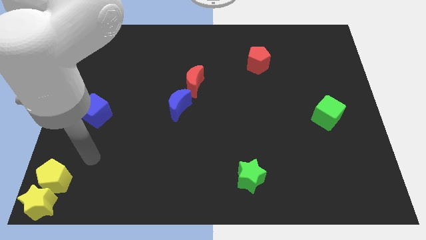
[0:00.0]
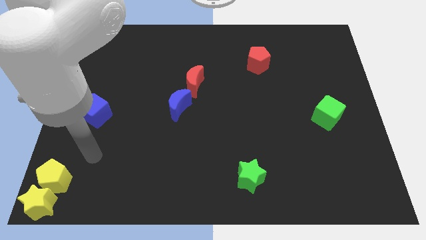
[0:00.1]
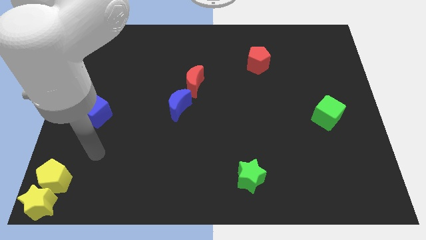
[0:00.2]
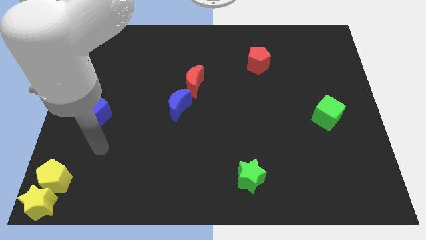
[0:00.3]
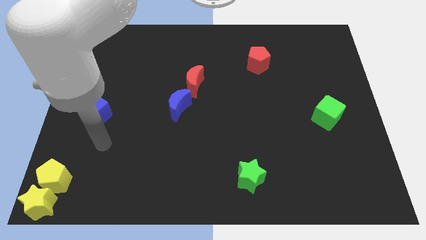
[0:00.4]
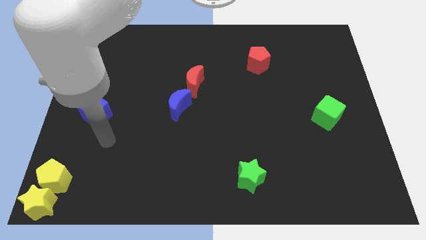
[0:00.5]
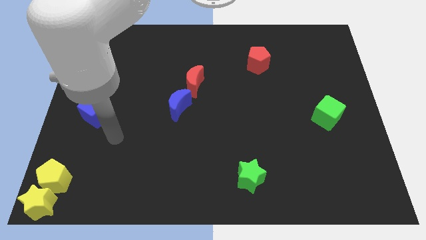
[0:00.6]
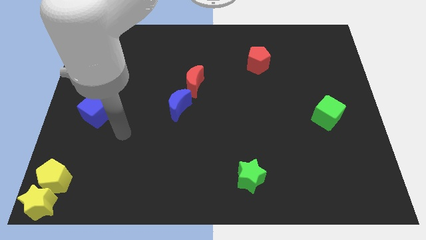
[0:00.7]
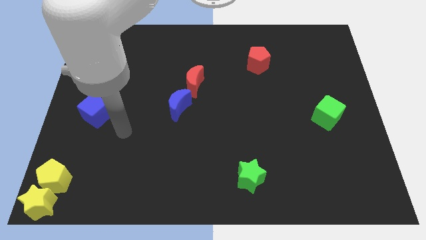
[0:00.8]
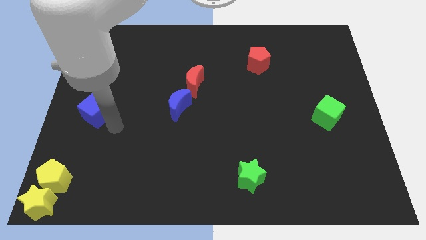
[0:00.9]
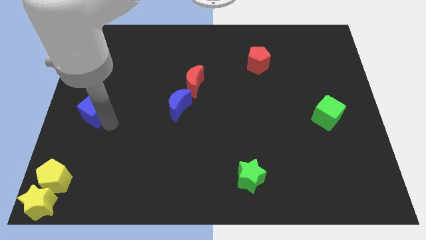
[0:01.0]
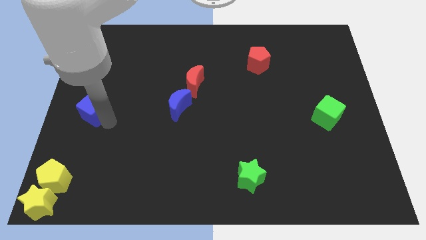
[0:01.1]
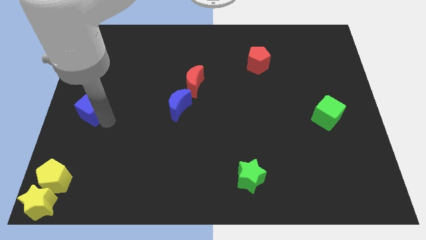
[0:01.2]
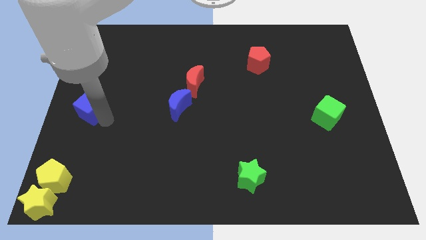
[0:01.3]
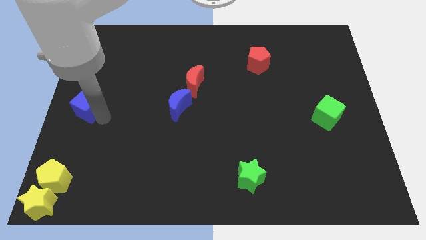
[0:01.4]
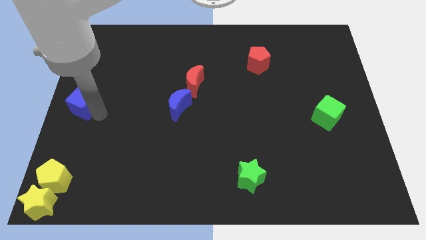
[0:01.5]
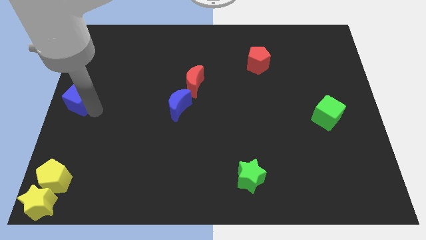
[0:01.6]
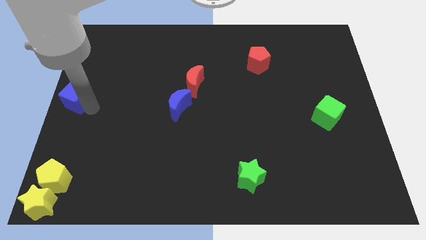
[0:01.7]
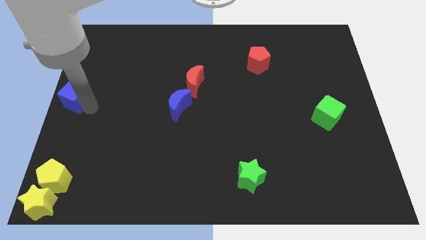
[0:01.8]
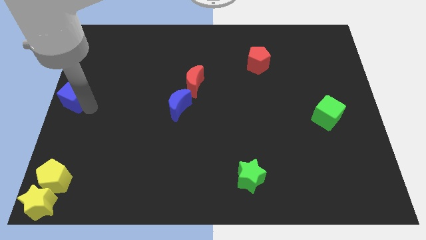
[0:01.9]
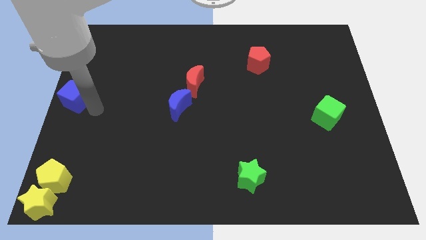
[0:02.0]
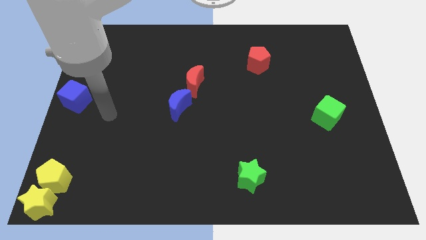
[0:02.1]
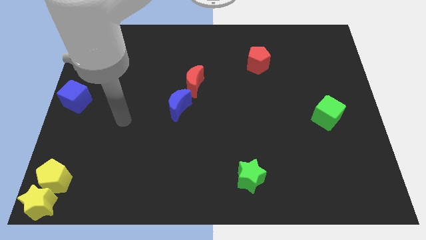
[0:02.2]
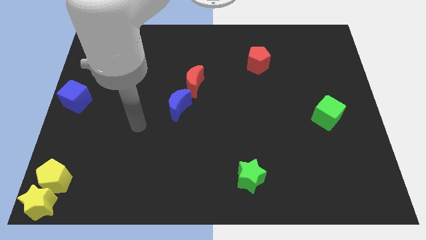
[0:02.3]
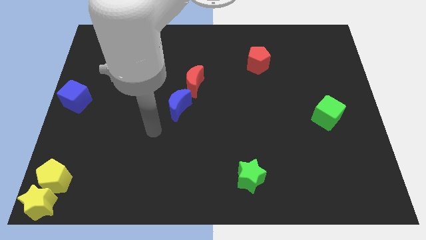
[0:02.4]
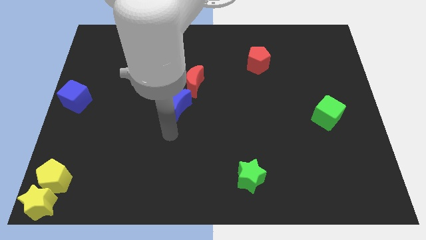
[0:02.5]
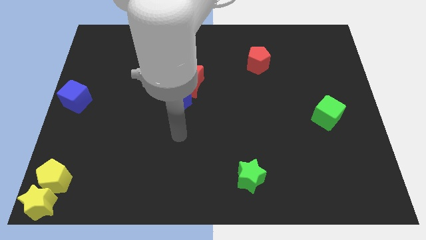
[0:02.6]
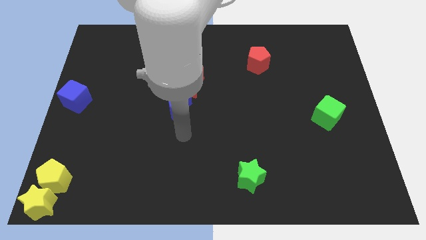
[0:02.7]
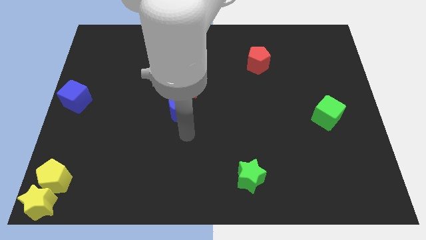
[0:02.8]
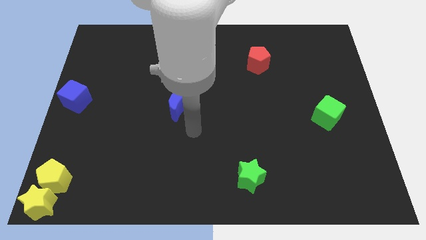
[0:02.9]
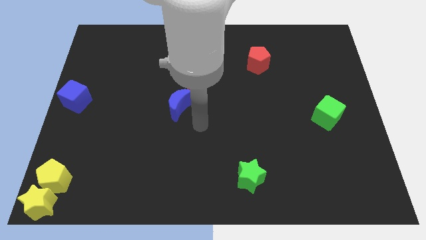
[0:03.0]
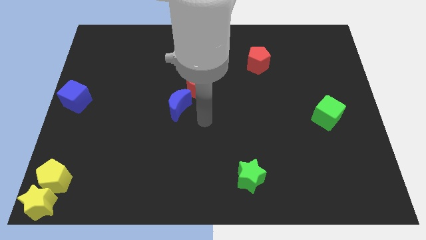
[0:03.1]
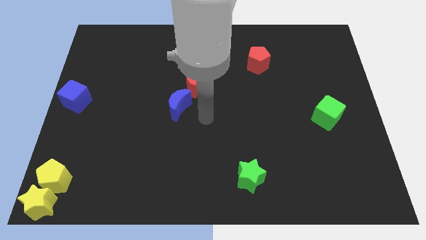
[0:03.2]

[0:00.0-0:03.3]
move the blue cube to the centre left of the board

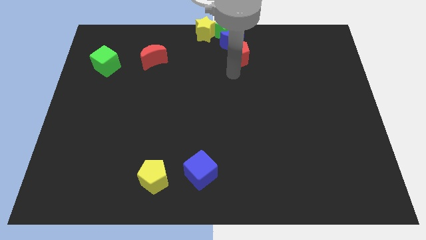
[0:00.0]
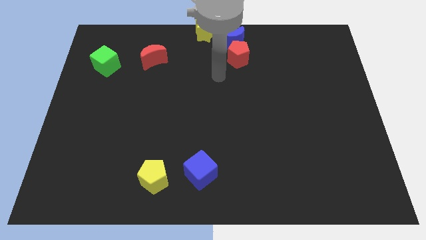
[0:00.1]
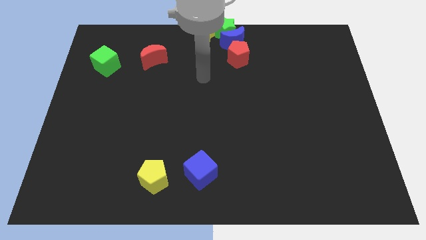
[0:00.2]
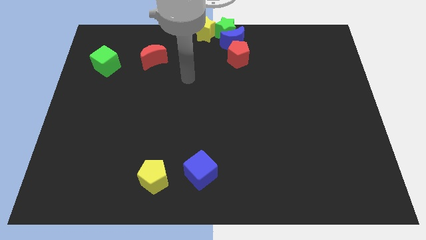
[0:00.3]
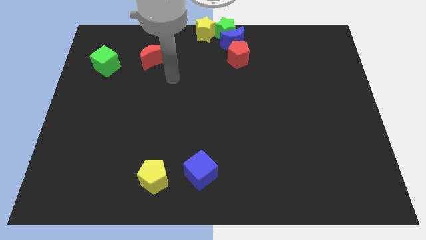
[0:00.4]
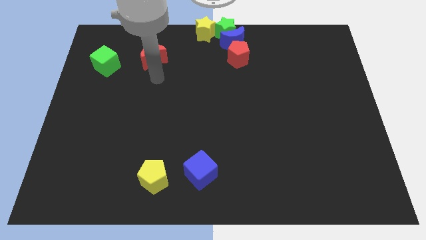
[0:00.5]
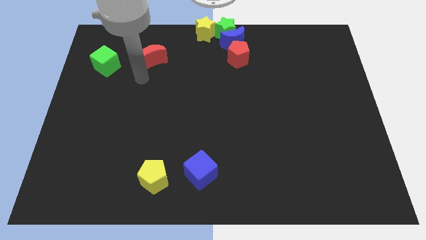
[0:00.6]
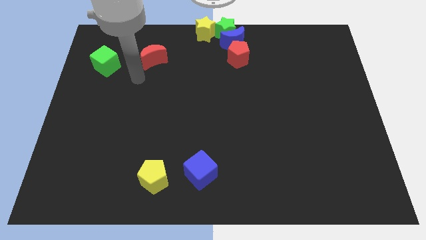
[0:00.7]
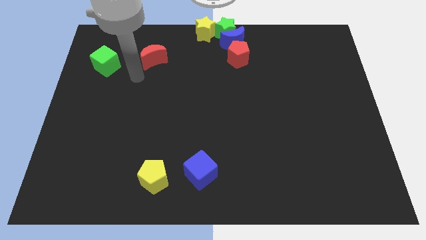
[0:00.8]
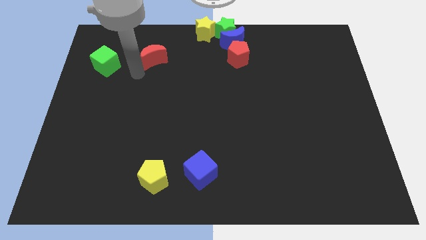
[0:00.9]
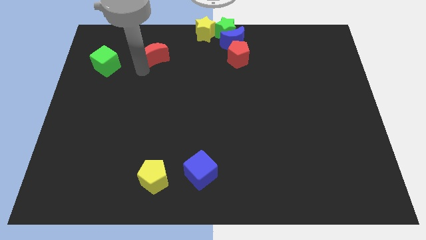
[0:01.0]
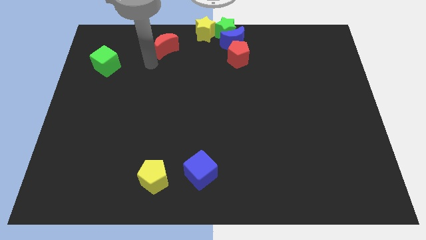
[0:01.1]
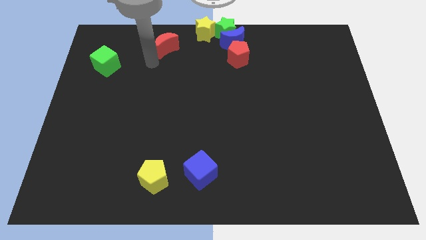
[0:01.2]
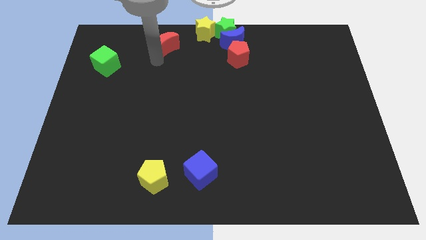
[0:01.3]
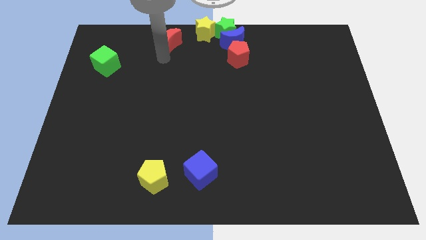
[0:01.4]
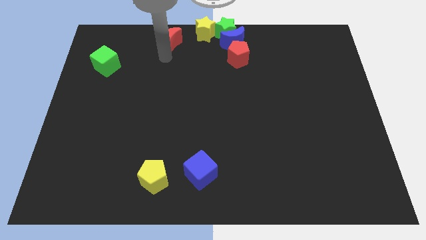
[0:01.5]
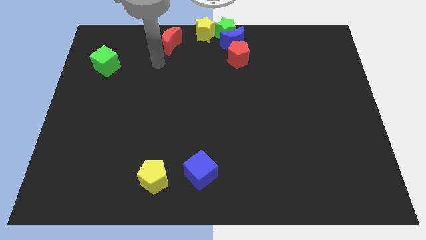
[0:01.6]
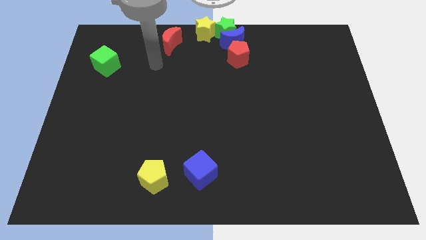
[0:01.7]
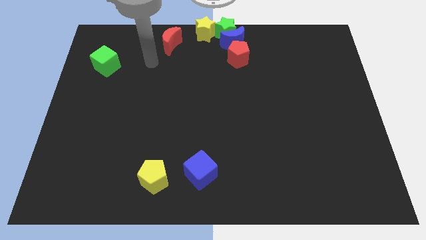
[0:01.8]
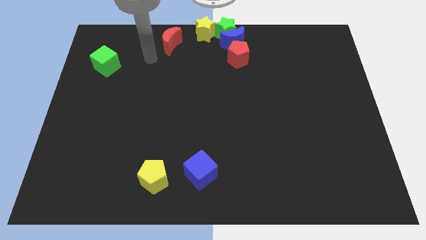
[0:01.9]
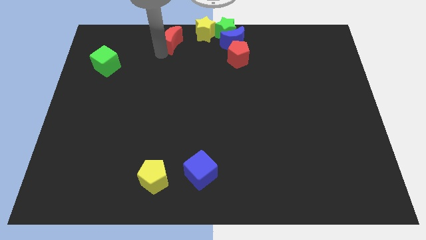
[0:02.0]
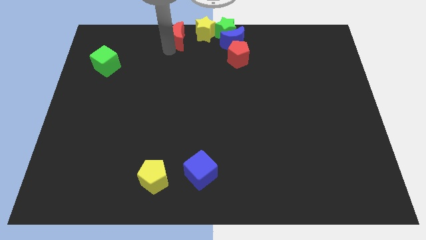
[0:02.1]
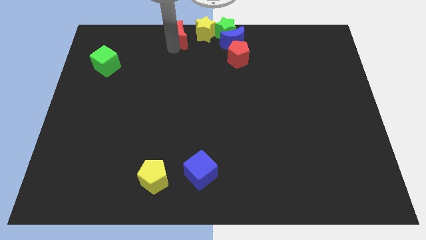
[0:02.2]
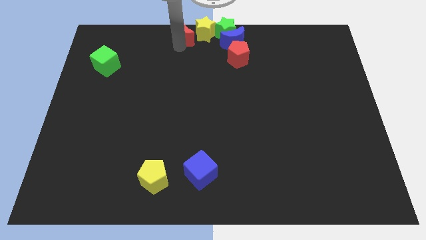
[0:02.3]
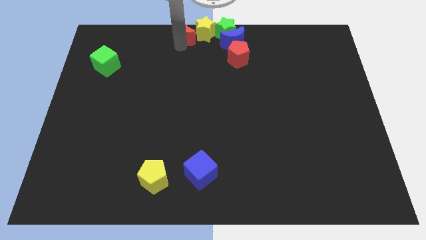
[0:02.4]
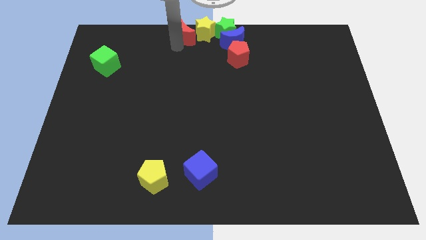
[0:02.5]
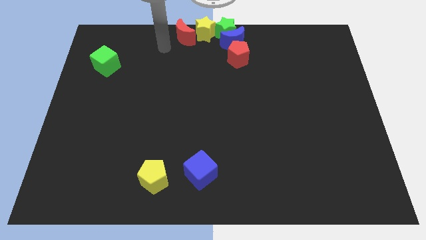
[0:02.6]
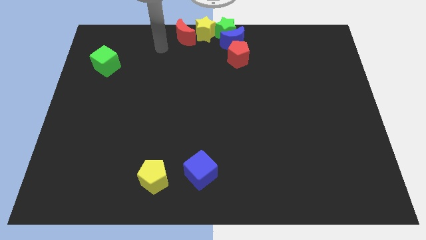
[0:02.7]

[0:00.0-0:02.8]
place red moon to the left of yellow star

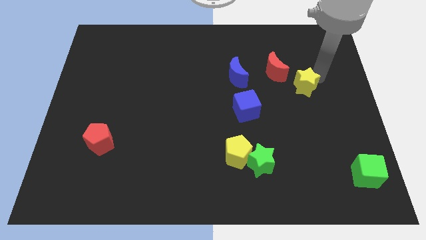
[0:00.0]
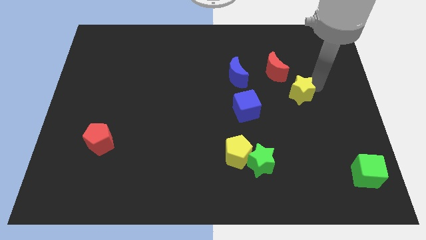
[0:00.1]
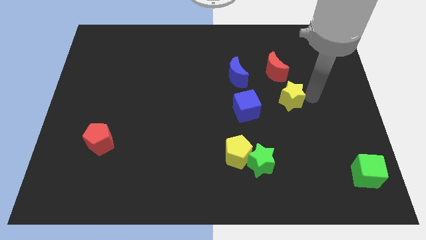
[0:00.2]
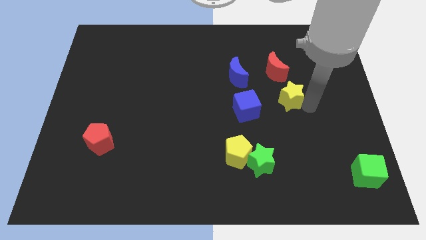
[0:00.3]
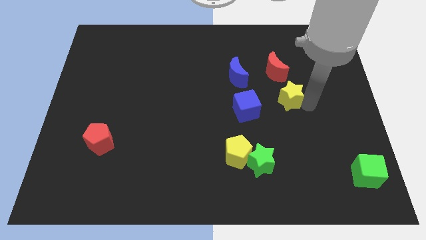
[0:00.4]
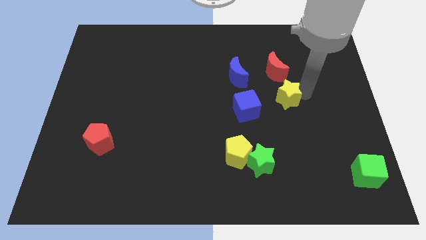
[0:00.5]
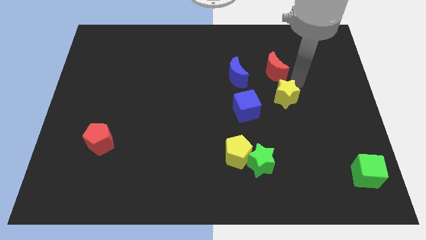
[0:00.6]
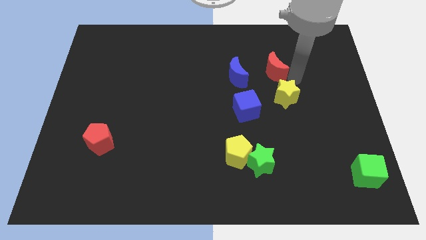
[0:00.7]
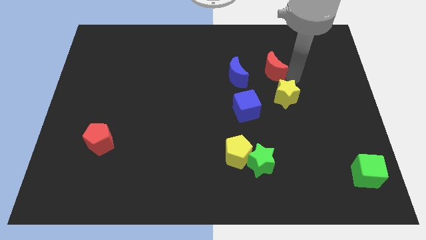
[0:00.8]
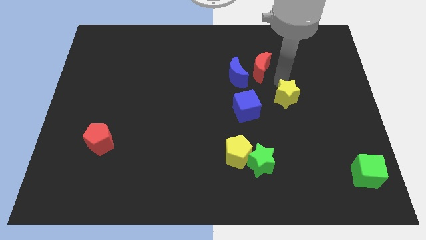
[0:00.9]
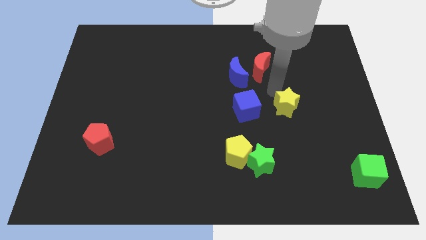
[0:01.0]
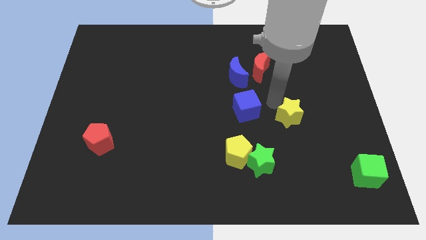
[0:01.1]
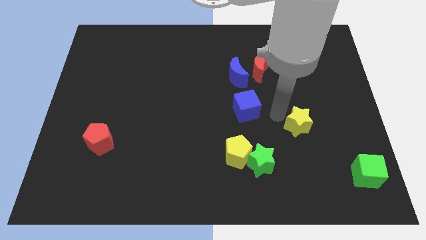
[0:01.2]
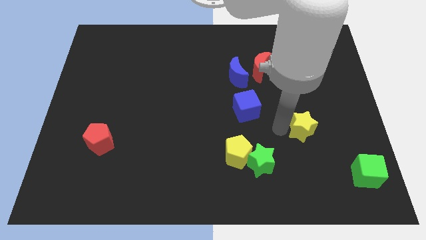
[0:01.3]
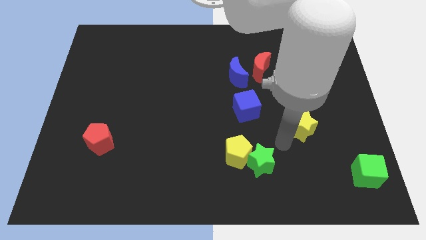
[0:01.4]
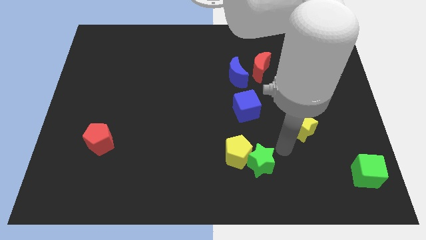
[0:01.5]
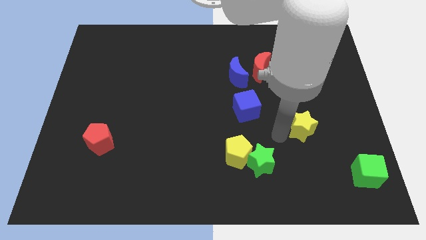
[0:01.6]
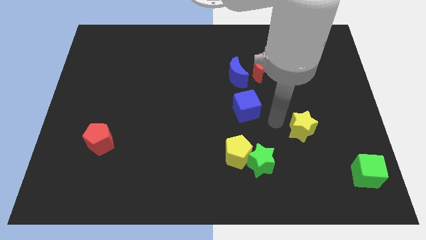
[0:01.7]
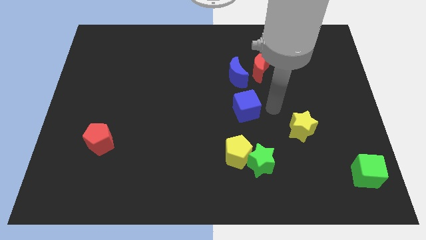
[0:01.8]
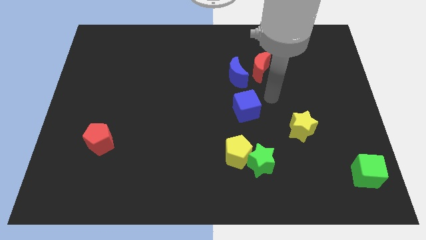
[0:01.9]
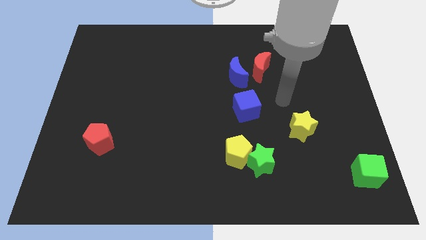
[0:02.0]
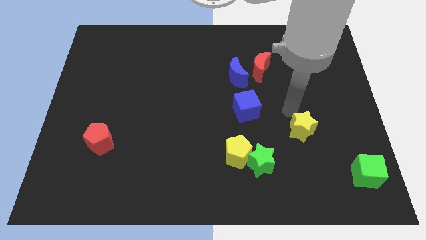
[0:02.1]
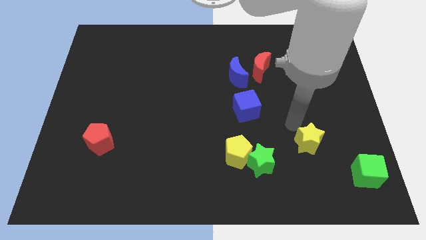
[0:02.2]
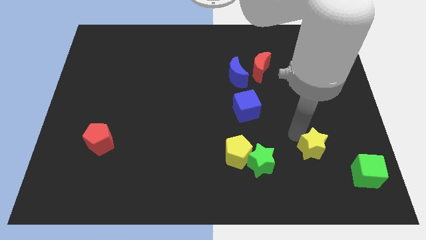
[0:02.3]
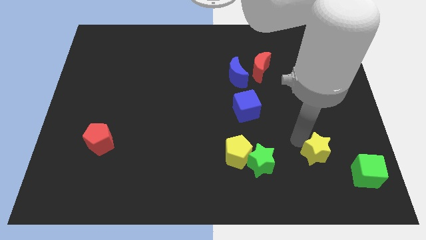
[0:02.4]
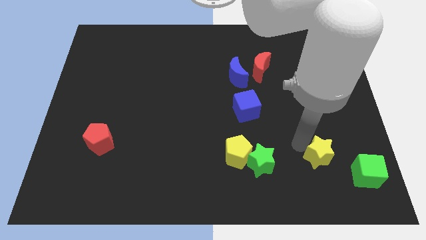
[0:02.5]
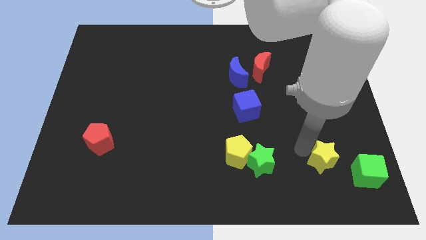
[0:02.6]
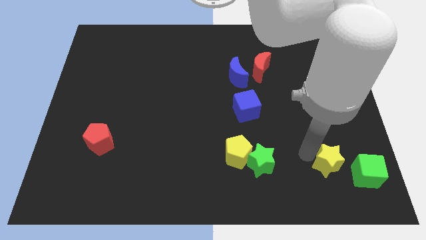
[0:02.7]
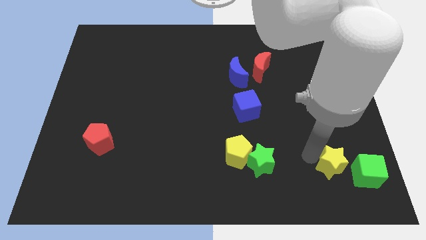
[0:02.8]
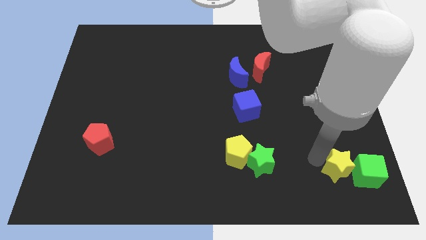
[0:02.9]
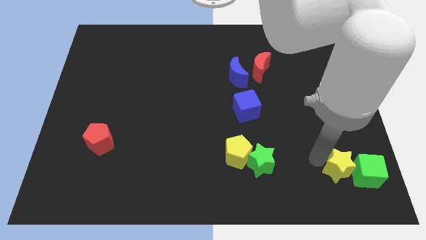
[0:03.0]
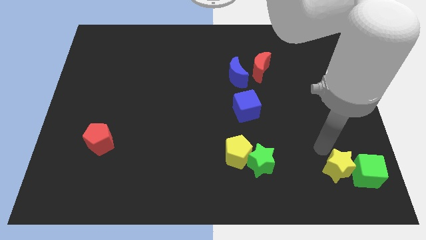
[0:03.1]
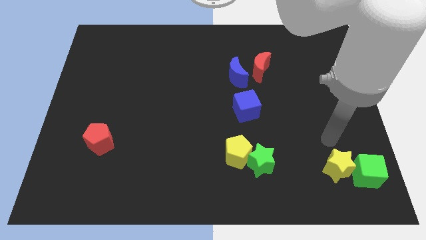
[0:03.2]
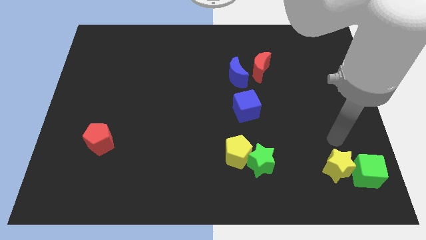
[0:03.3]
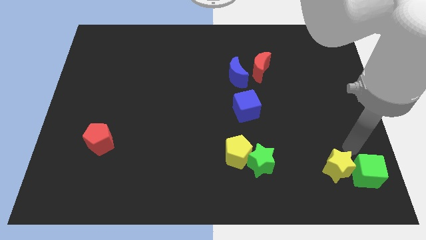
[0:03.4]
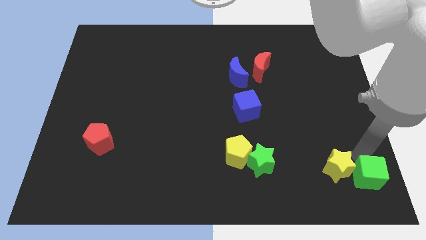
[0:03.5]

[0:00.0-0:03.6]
move yellow star towards green cube
